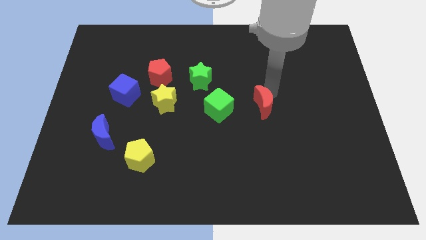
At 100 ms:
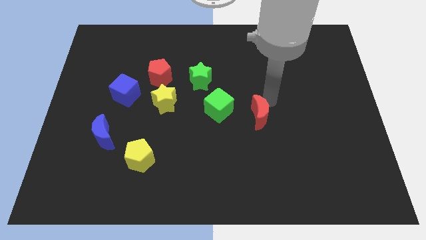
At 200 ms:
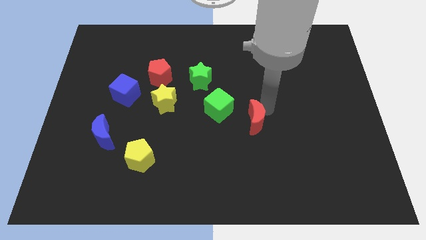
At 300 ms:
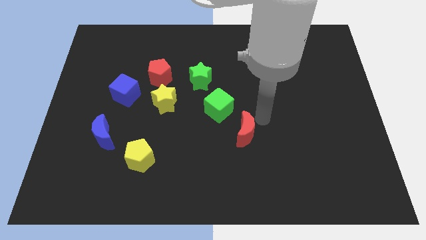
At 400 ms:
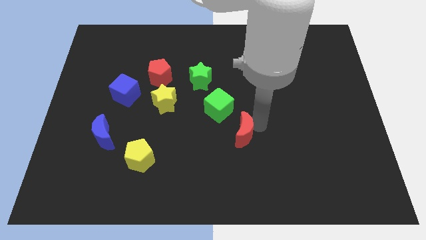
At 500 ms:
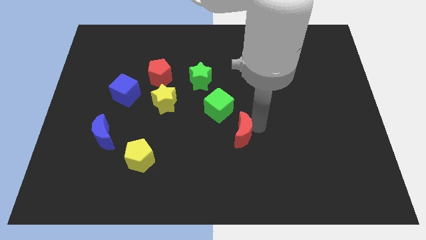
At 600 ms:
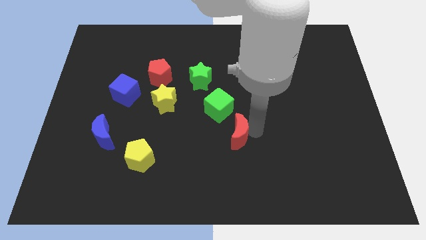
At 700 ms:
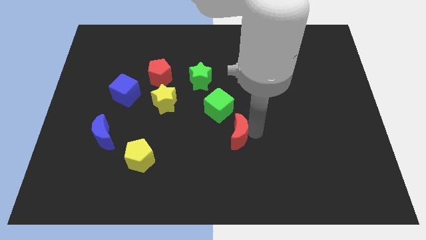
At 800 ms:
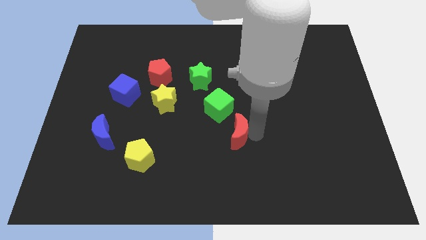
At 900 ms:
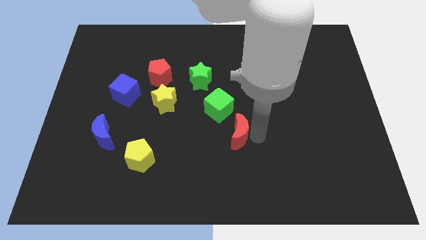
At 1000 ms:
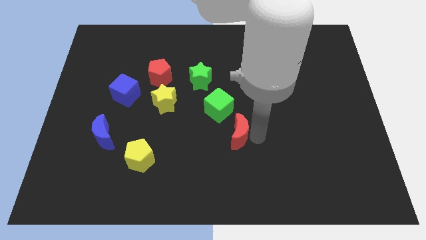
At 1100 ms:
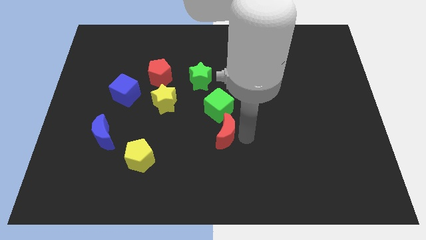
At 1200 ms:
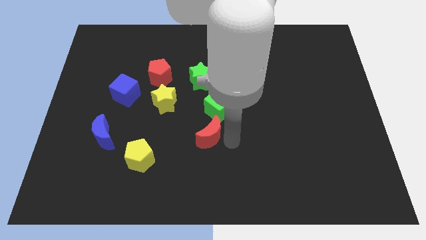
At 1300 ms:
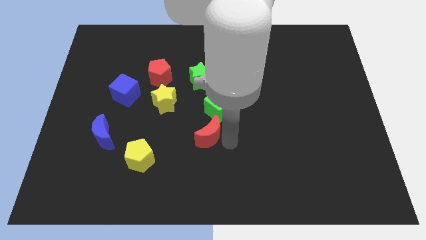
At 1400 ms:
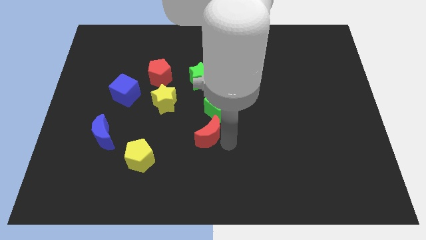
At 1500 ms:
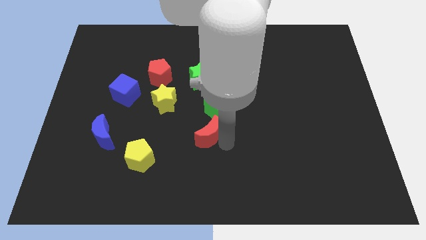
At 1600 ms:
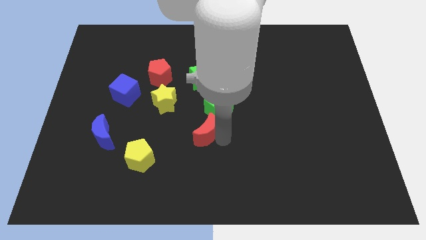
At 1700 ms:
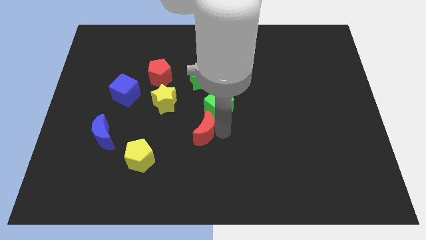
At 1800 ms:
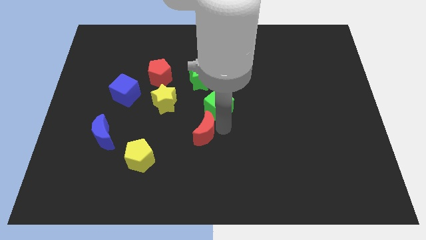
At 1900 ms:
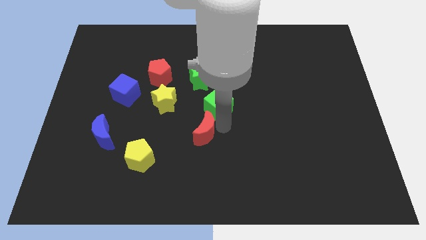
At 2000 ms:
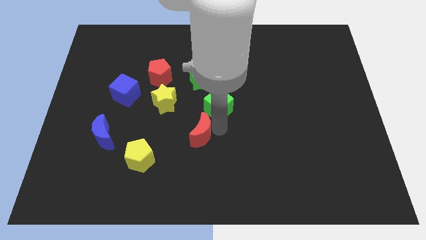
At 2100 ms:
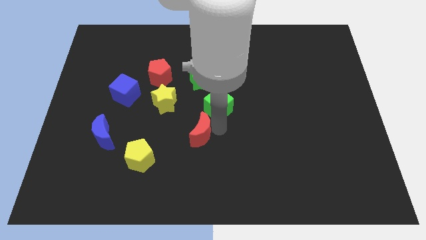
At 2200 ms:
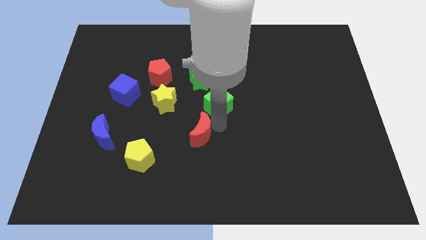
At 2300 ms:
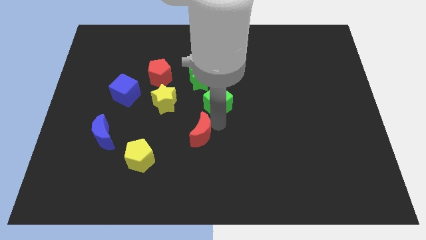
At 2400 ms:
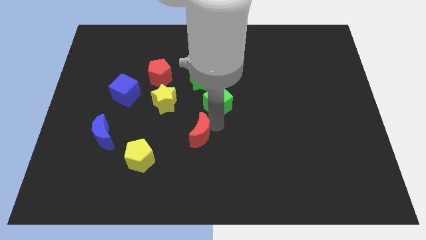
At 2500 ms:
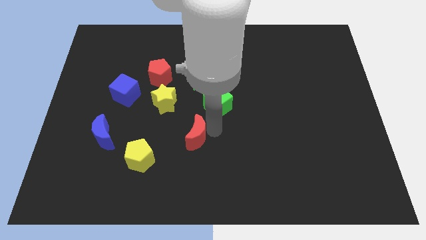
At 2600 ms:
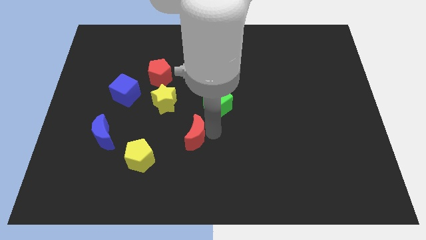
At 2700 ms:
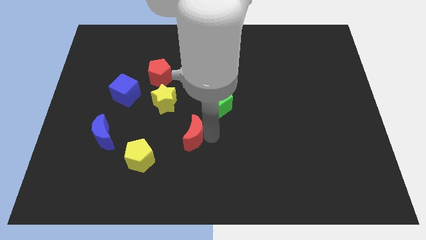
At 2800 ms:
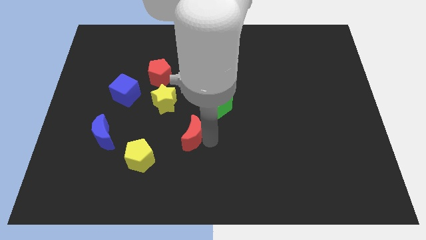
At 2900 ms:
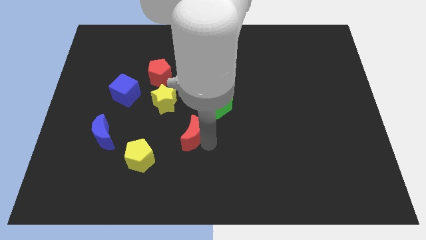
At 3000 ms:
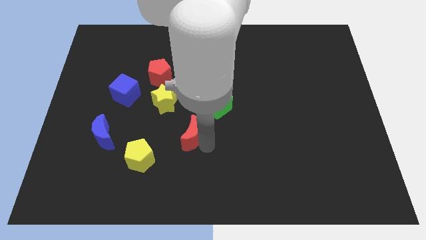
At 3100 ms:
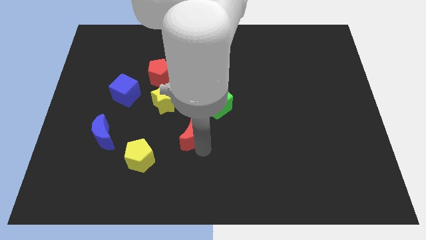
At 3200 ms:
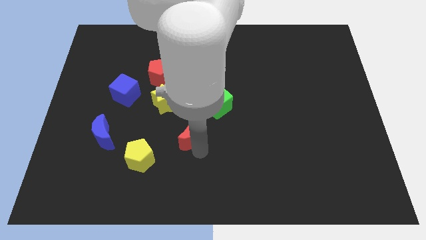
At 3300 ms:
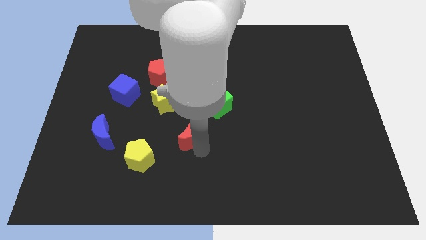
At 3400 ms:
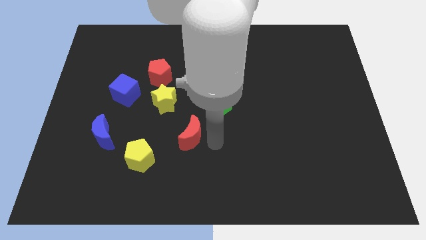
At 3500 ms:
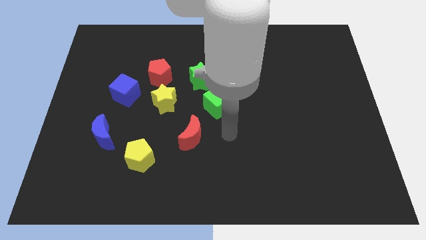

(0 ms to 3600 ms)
push red crescent slightly towards left

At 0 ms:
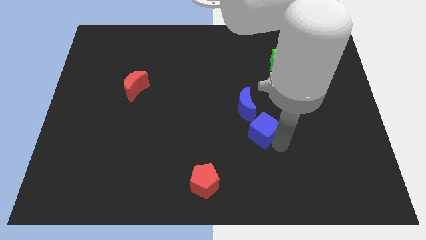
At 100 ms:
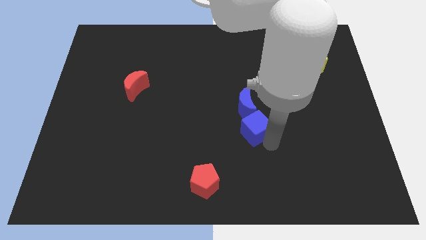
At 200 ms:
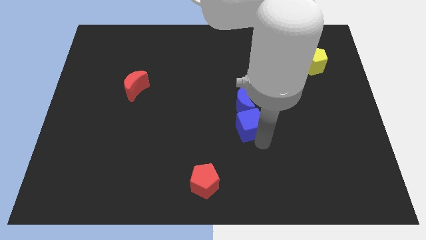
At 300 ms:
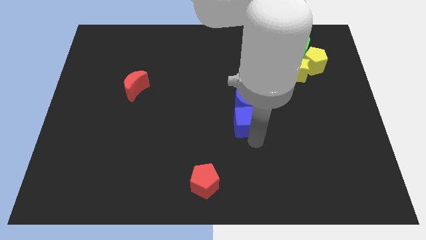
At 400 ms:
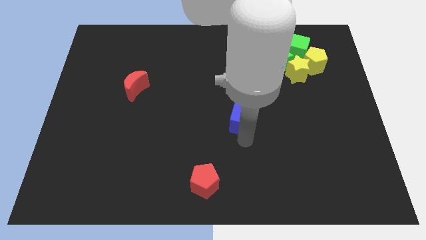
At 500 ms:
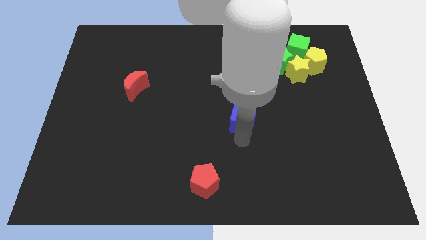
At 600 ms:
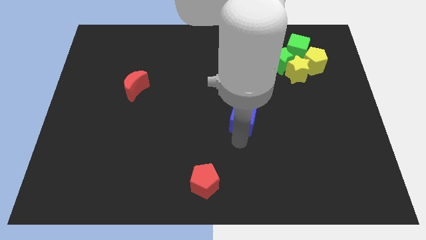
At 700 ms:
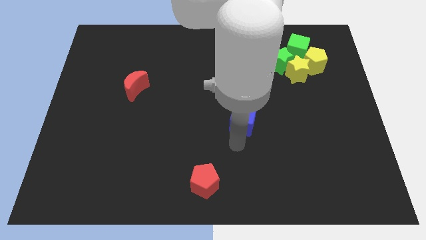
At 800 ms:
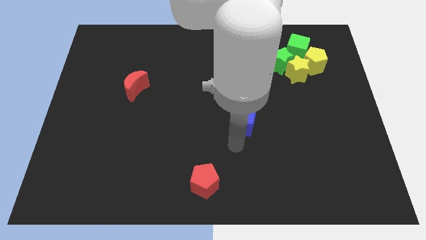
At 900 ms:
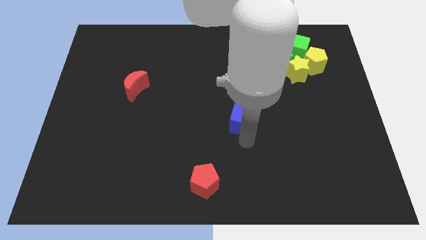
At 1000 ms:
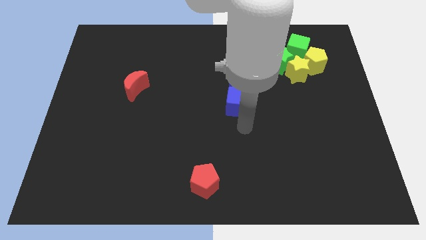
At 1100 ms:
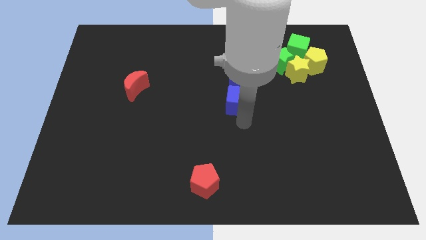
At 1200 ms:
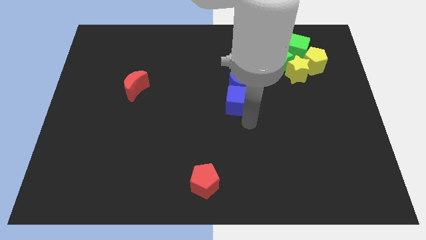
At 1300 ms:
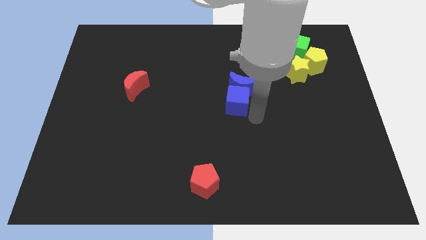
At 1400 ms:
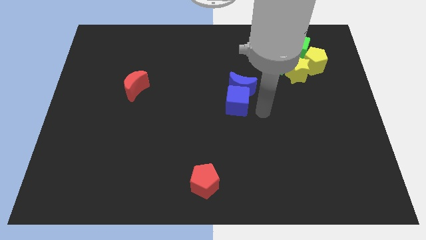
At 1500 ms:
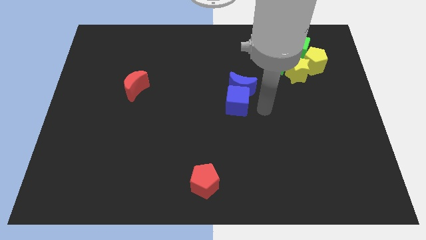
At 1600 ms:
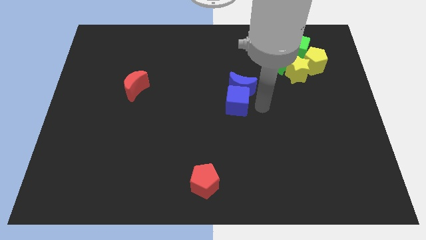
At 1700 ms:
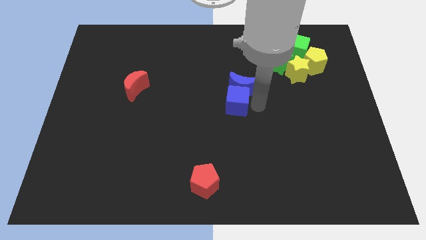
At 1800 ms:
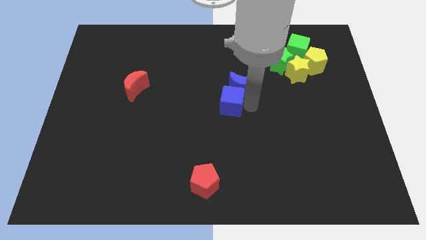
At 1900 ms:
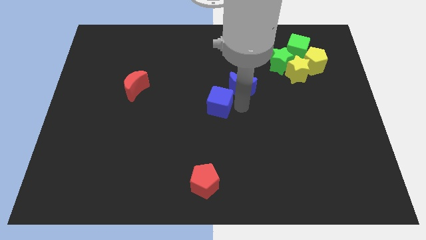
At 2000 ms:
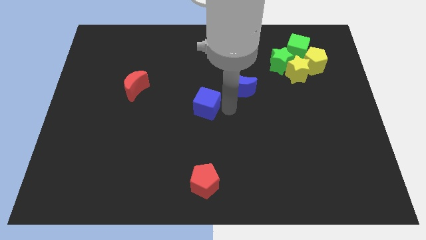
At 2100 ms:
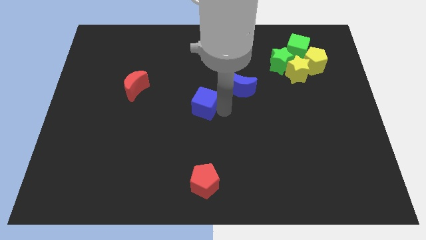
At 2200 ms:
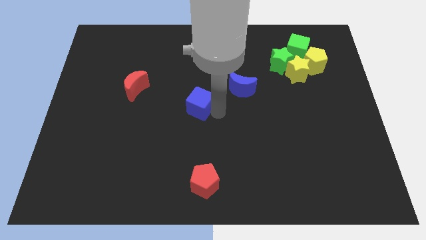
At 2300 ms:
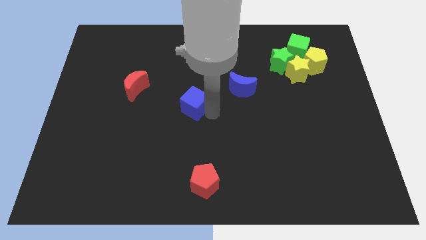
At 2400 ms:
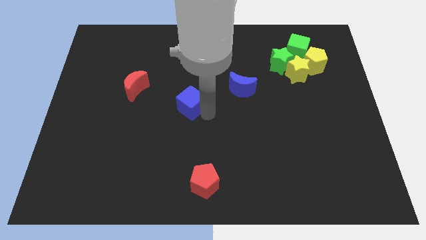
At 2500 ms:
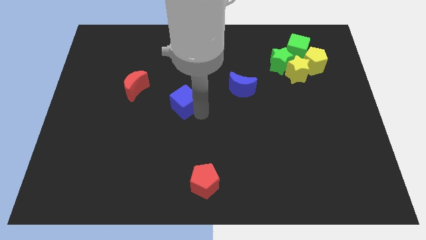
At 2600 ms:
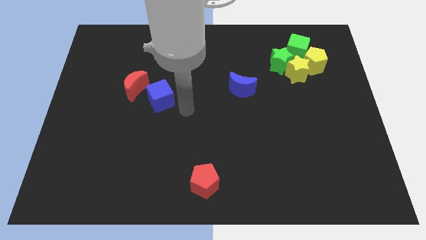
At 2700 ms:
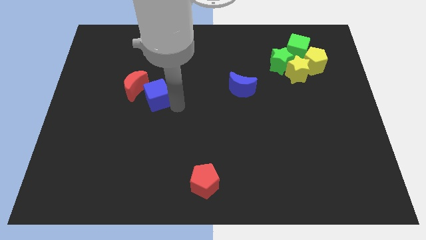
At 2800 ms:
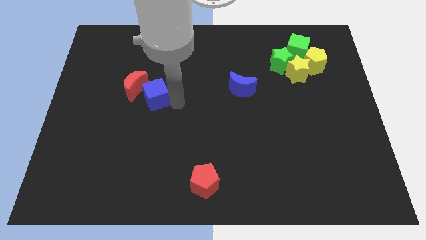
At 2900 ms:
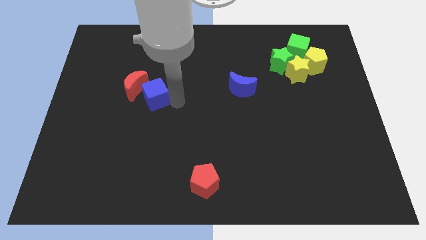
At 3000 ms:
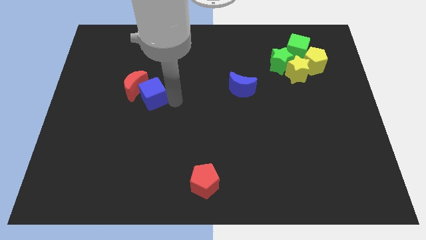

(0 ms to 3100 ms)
separate the blue blocks

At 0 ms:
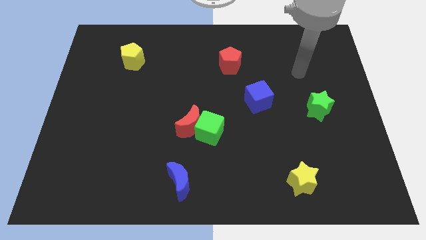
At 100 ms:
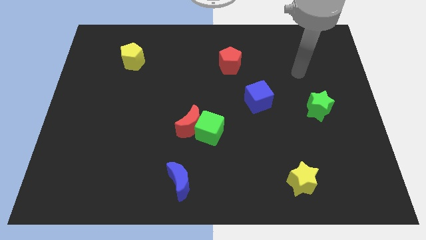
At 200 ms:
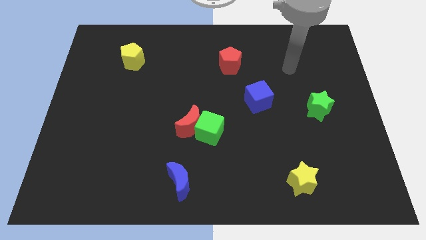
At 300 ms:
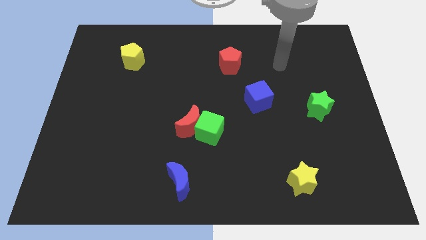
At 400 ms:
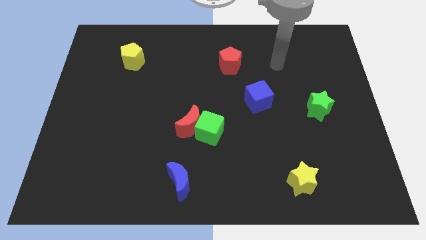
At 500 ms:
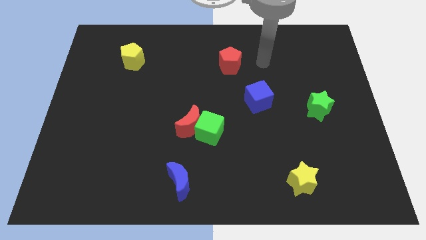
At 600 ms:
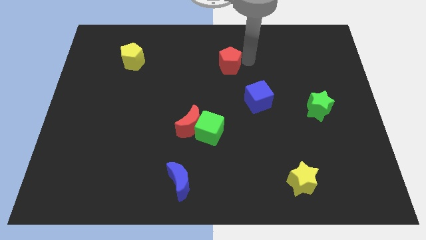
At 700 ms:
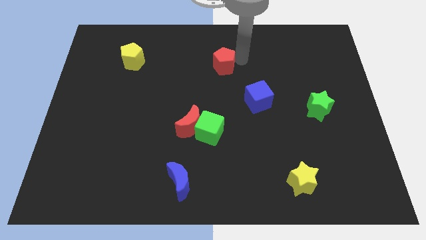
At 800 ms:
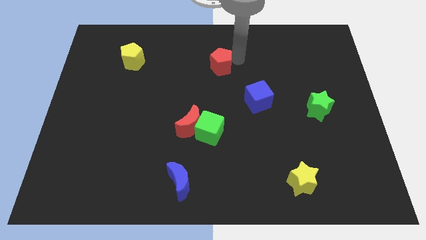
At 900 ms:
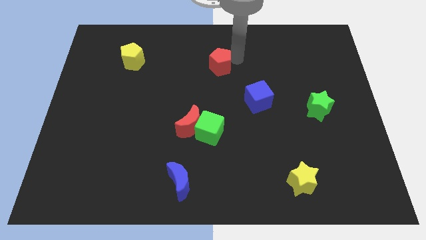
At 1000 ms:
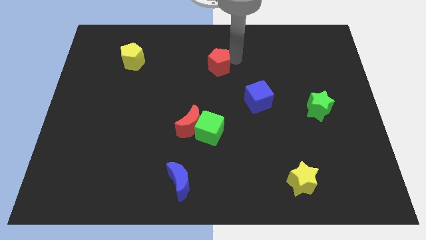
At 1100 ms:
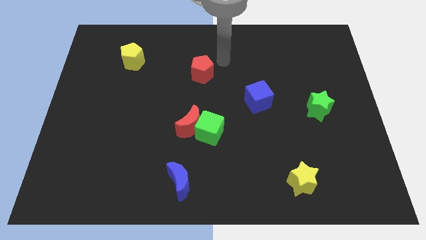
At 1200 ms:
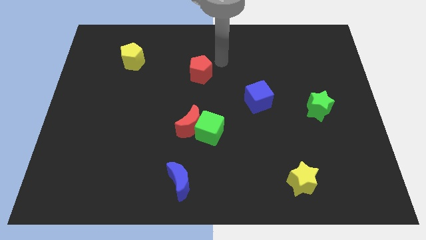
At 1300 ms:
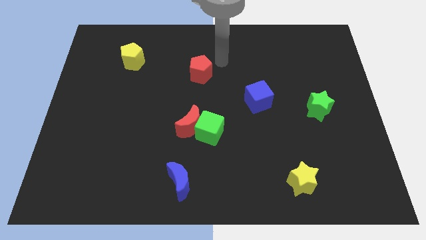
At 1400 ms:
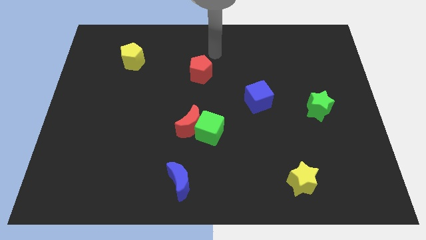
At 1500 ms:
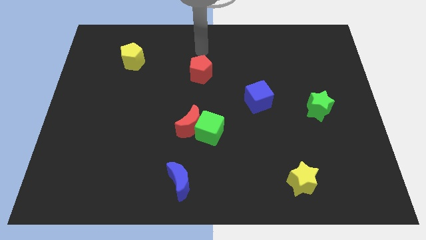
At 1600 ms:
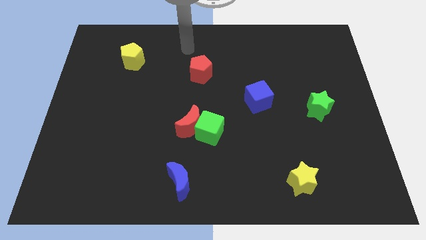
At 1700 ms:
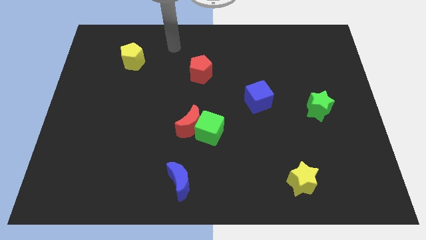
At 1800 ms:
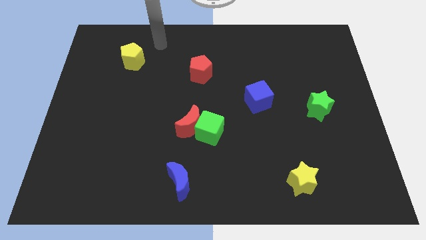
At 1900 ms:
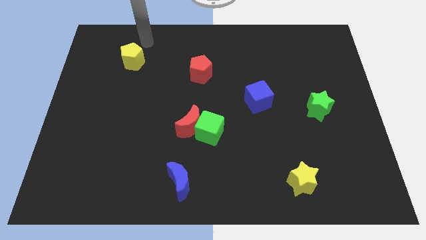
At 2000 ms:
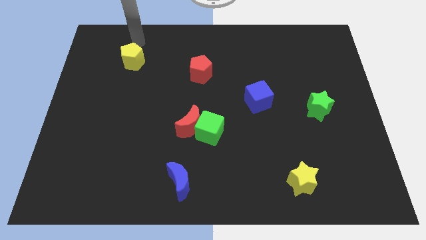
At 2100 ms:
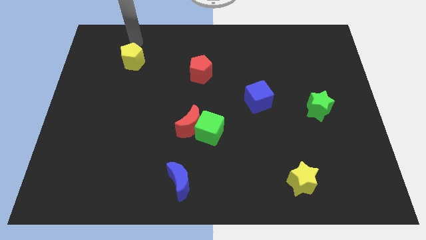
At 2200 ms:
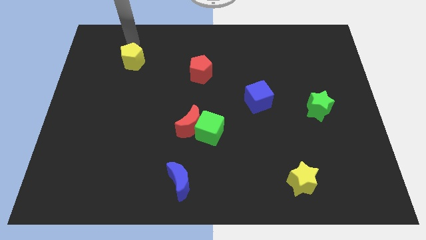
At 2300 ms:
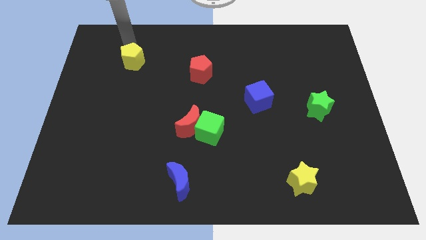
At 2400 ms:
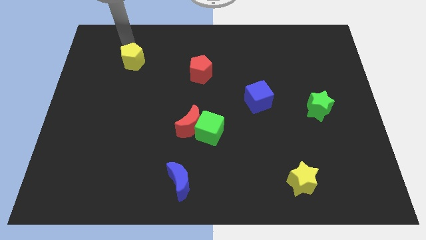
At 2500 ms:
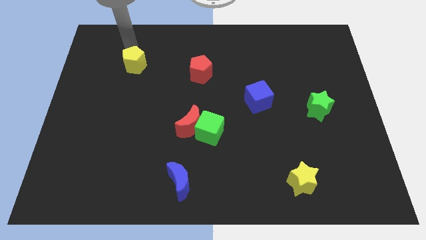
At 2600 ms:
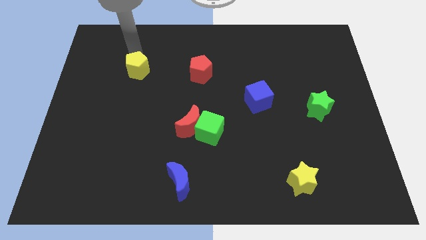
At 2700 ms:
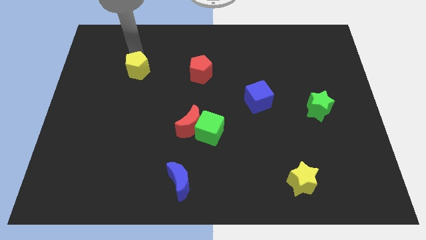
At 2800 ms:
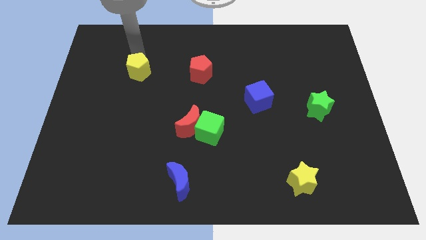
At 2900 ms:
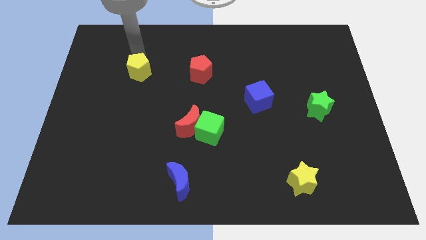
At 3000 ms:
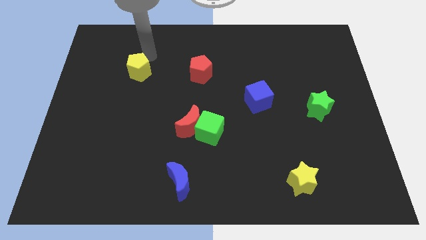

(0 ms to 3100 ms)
slide the yellow pentagon horizontal to the red pentagon
